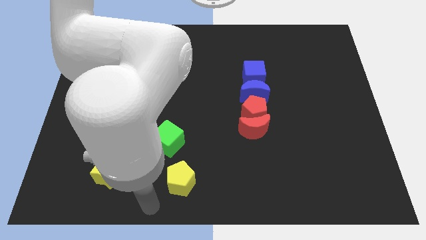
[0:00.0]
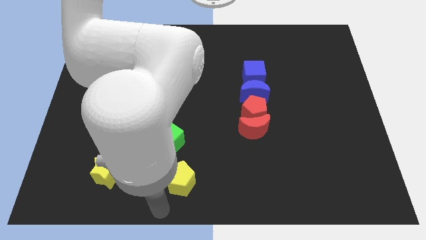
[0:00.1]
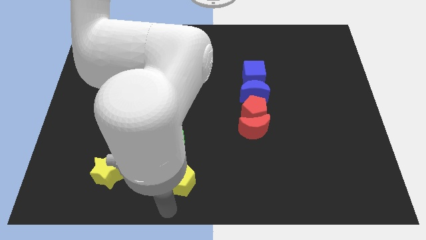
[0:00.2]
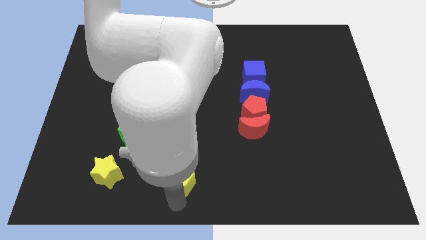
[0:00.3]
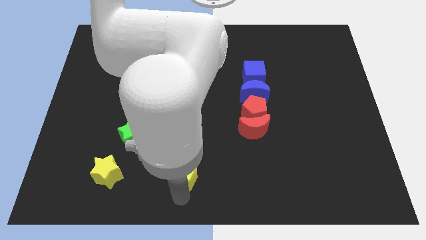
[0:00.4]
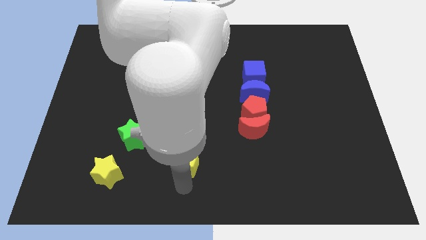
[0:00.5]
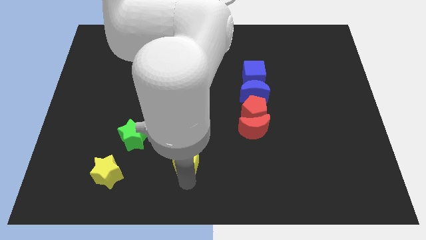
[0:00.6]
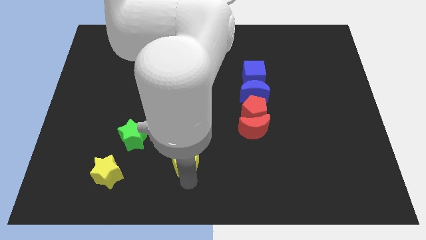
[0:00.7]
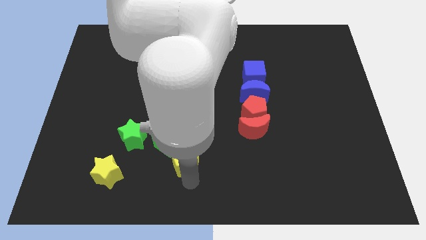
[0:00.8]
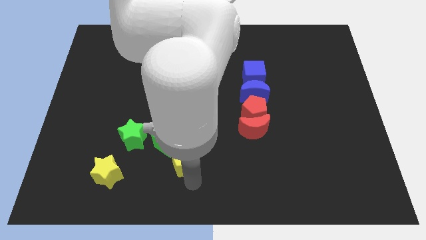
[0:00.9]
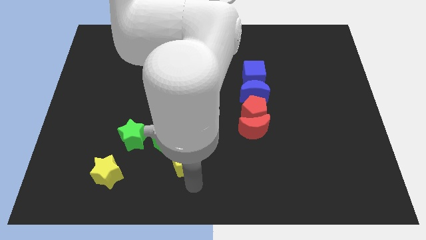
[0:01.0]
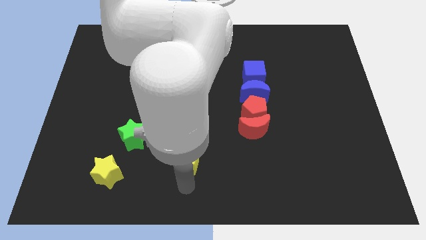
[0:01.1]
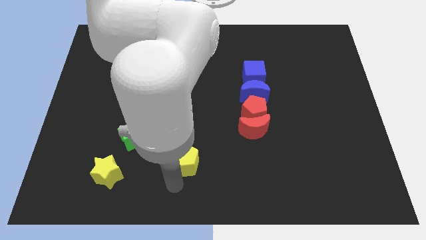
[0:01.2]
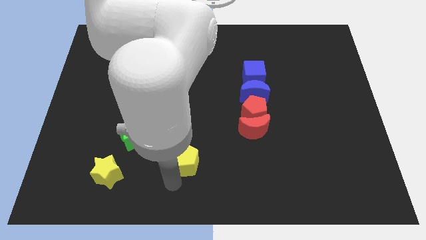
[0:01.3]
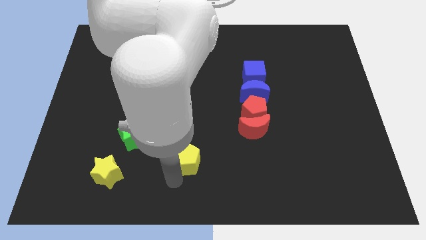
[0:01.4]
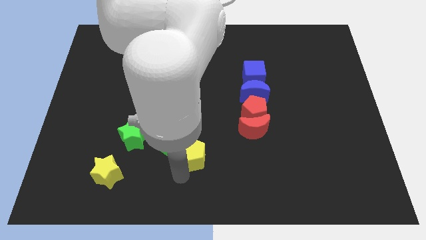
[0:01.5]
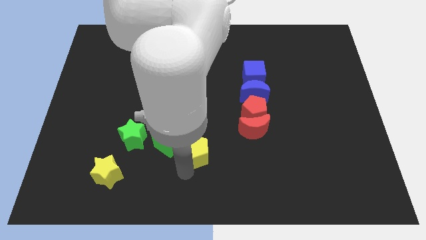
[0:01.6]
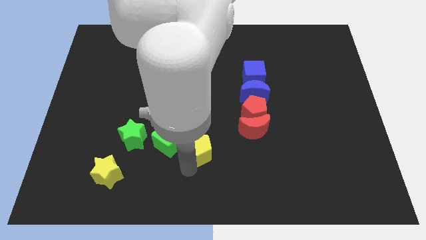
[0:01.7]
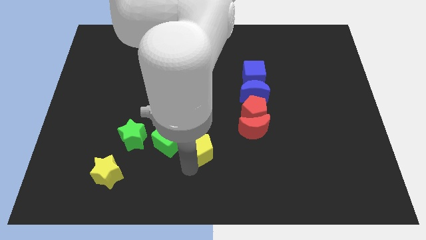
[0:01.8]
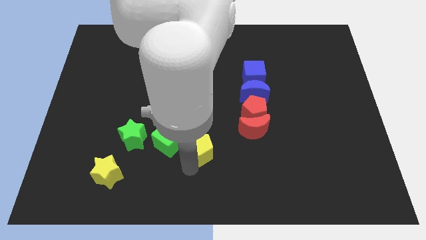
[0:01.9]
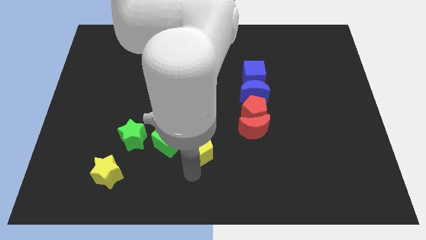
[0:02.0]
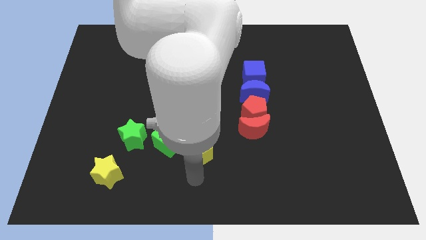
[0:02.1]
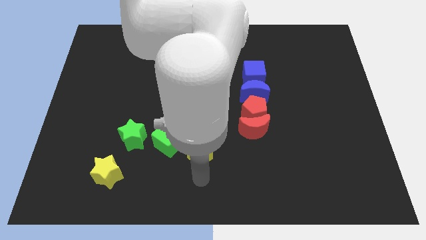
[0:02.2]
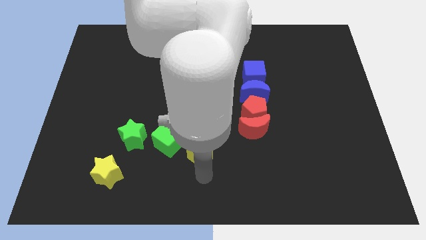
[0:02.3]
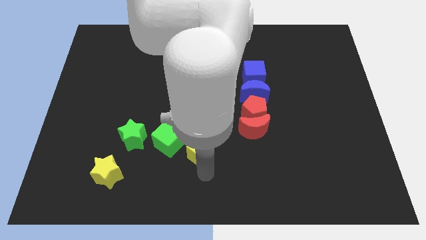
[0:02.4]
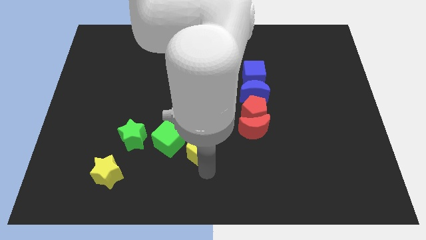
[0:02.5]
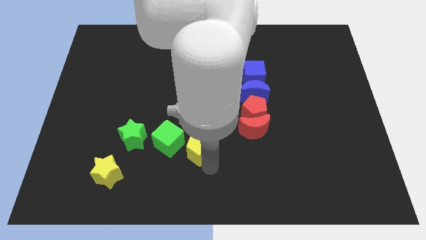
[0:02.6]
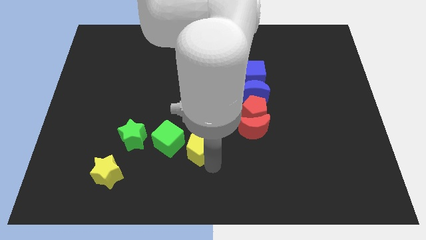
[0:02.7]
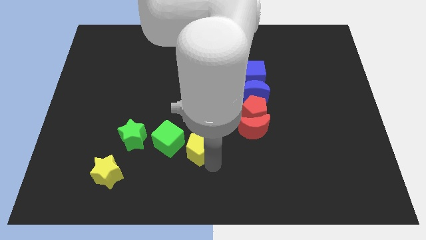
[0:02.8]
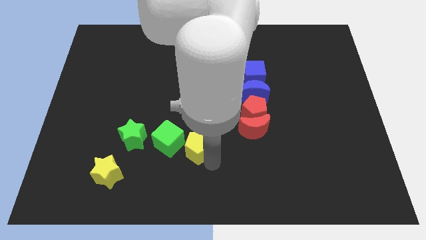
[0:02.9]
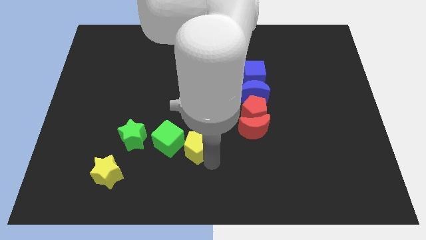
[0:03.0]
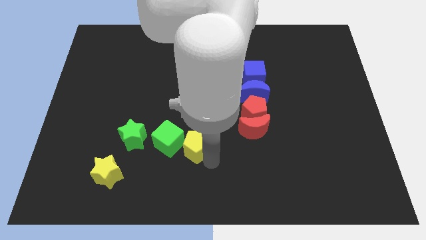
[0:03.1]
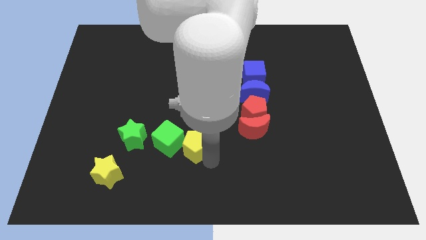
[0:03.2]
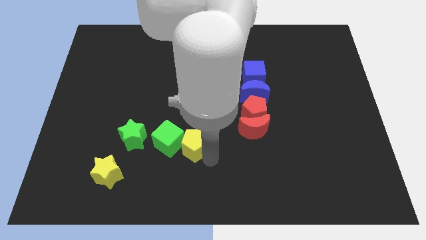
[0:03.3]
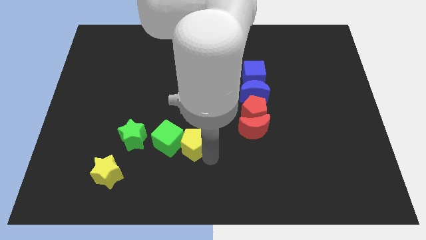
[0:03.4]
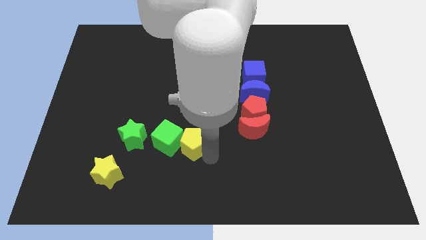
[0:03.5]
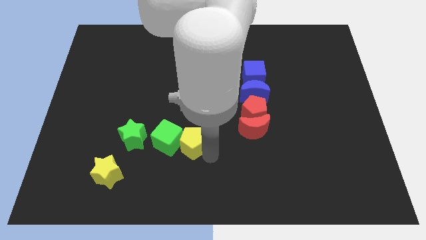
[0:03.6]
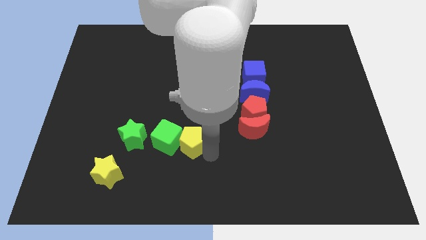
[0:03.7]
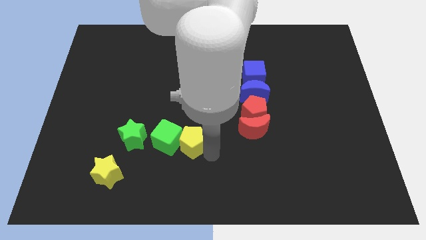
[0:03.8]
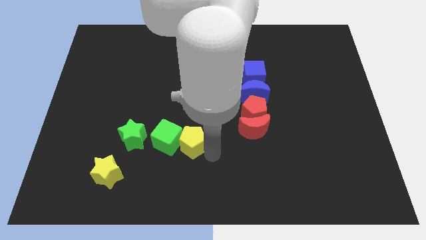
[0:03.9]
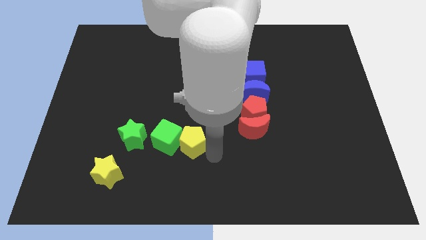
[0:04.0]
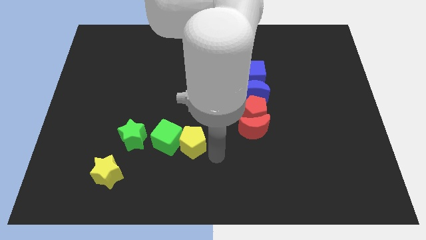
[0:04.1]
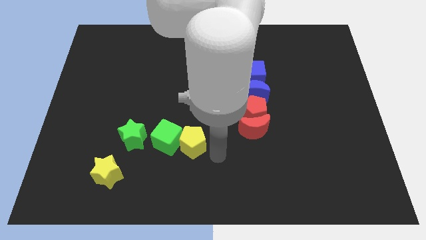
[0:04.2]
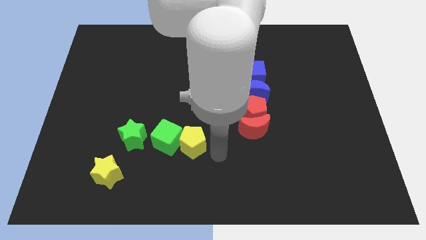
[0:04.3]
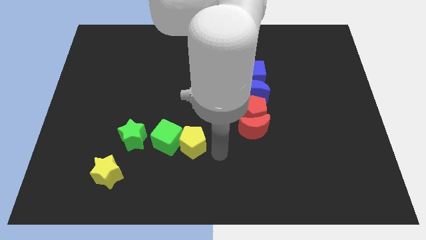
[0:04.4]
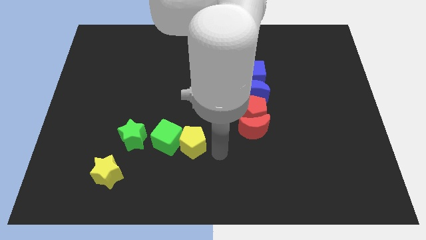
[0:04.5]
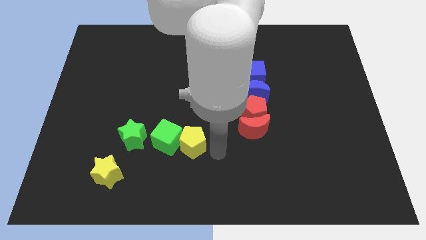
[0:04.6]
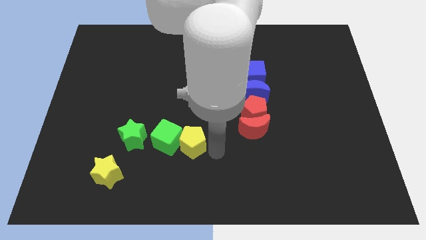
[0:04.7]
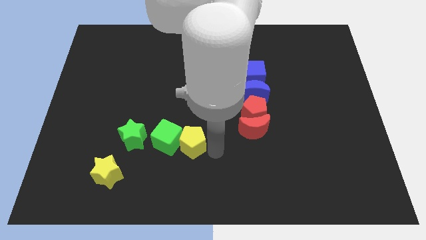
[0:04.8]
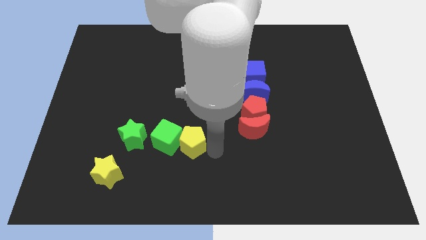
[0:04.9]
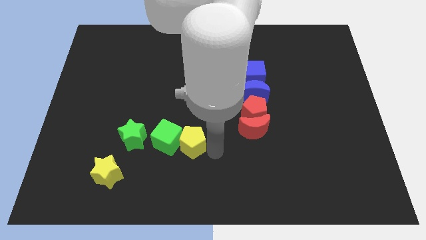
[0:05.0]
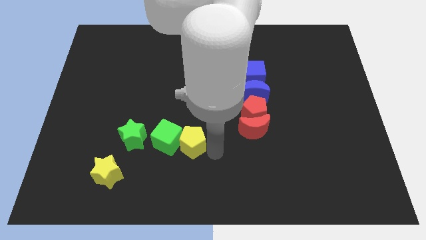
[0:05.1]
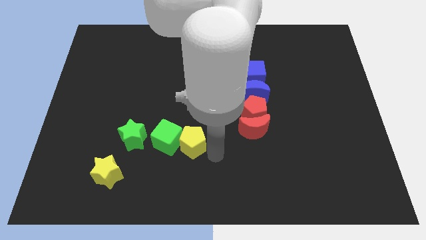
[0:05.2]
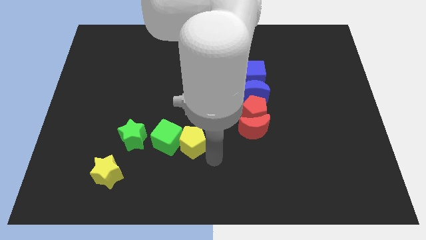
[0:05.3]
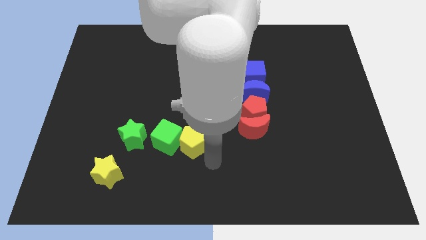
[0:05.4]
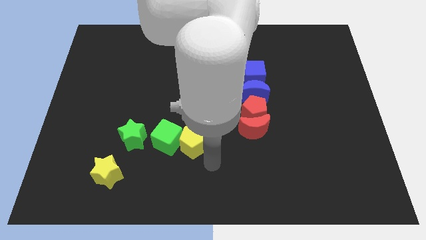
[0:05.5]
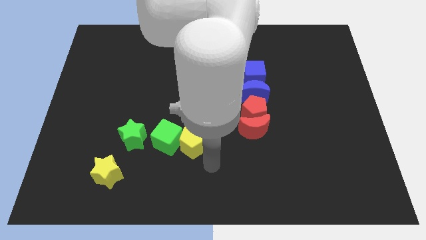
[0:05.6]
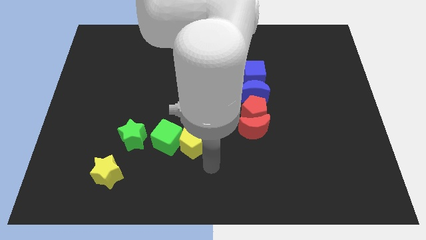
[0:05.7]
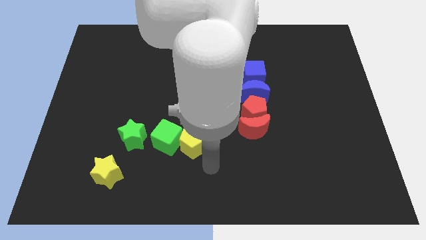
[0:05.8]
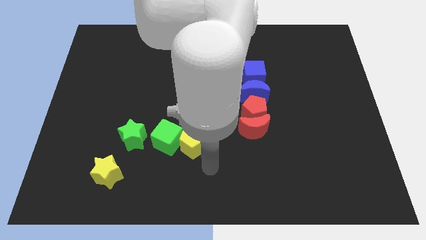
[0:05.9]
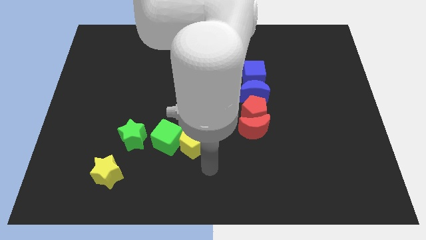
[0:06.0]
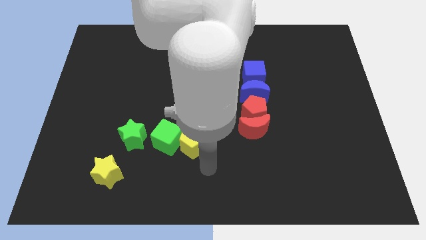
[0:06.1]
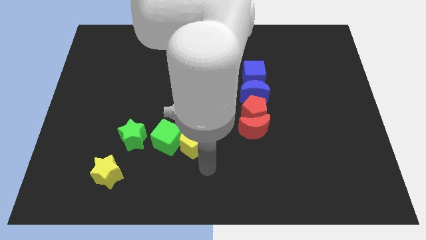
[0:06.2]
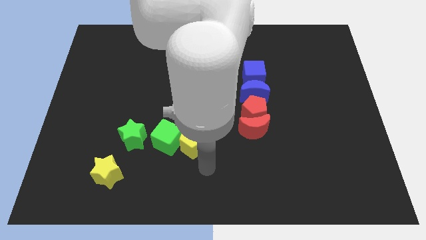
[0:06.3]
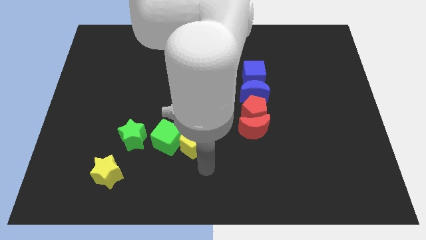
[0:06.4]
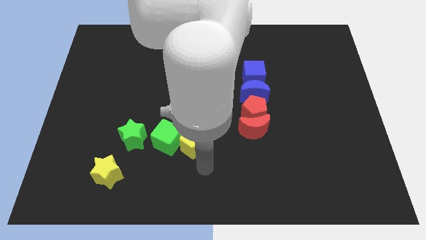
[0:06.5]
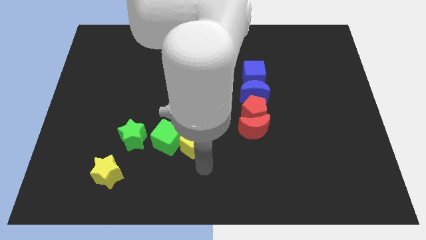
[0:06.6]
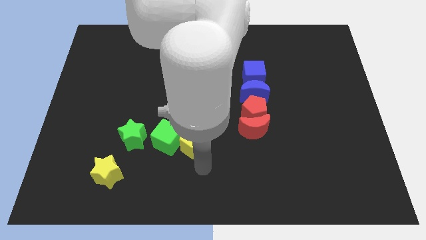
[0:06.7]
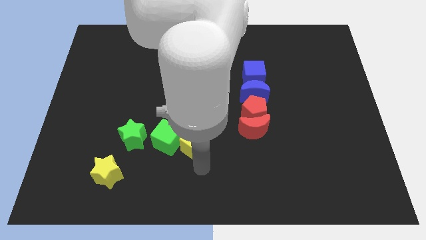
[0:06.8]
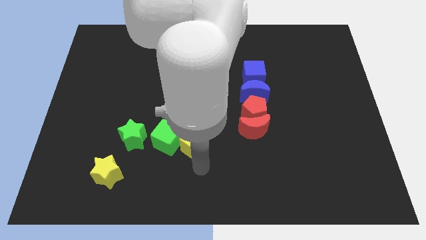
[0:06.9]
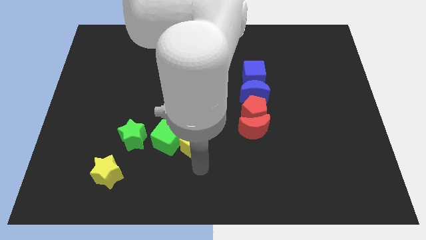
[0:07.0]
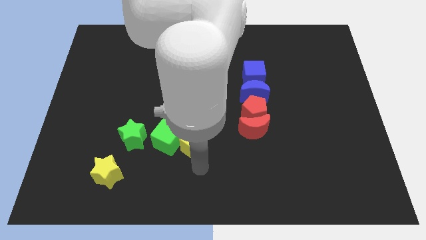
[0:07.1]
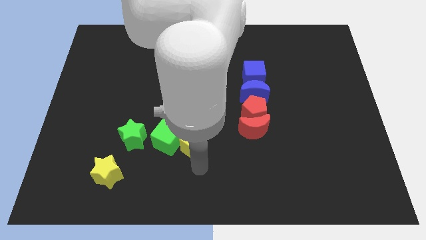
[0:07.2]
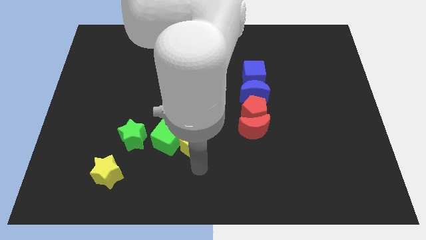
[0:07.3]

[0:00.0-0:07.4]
push the yellow pentagon to the right of the green cube

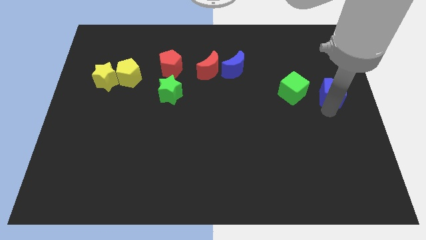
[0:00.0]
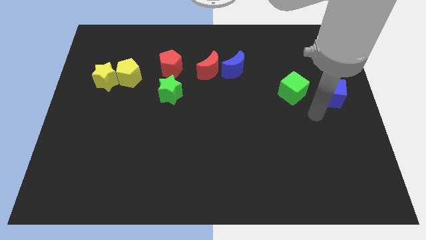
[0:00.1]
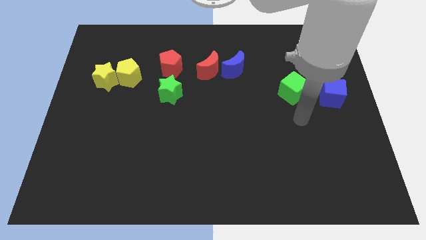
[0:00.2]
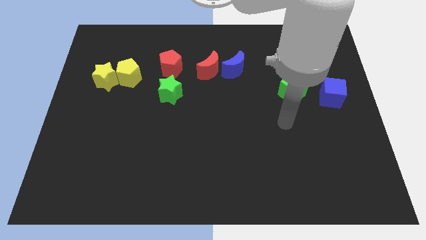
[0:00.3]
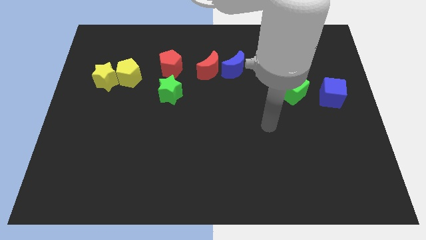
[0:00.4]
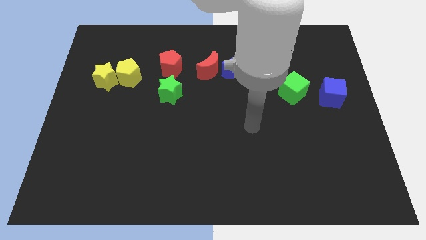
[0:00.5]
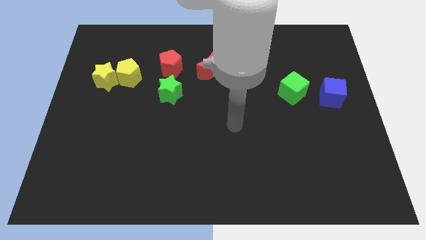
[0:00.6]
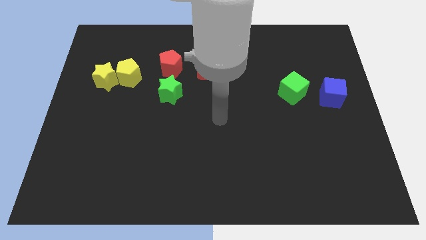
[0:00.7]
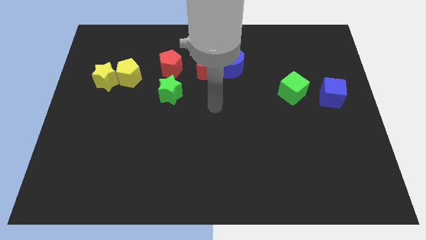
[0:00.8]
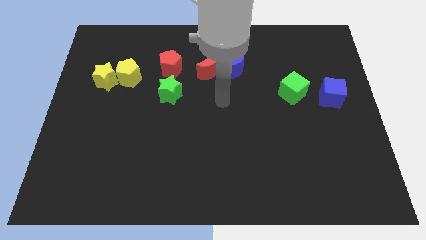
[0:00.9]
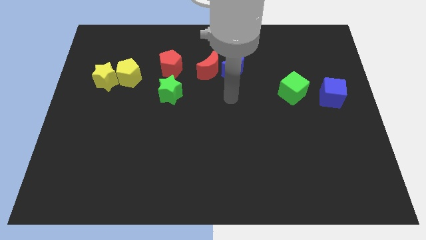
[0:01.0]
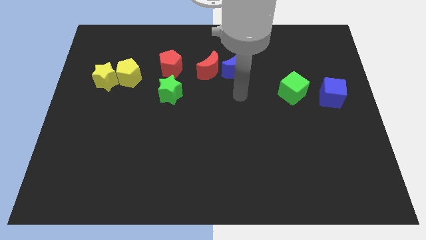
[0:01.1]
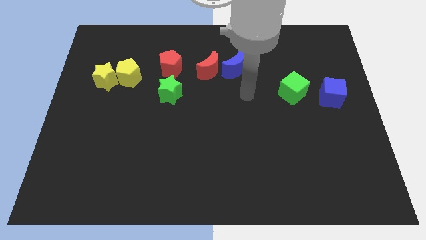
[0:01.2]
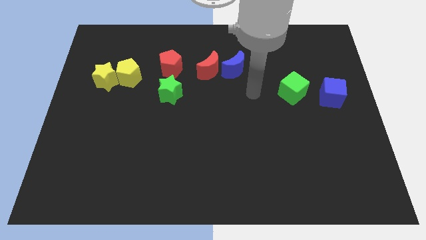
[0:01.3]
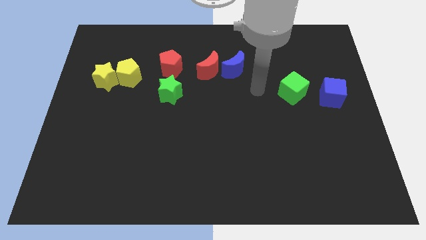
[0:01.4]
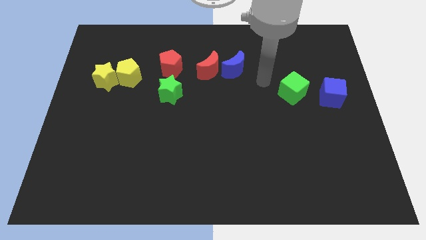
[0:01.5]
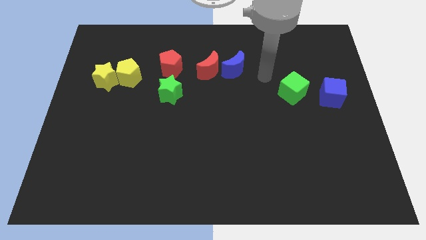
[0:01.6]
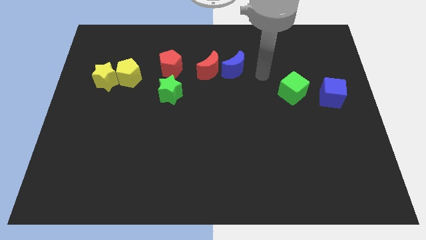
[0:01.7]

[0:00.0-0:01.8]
move your arm in between the green cube and blue crescent
